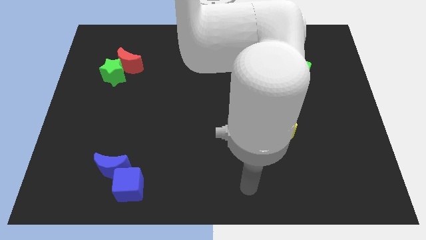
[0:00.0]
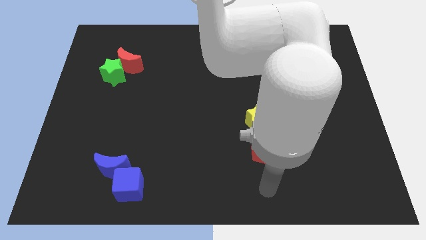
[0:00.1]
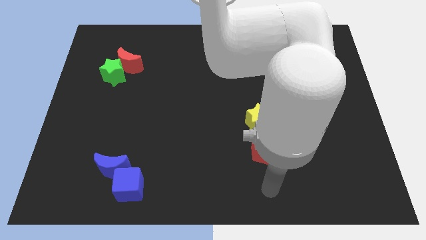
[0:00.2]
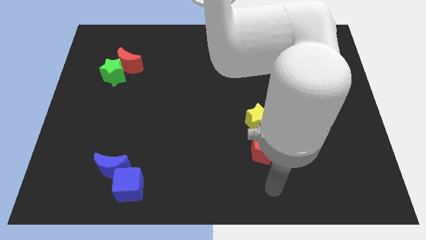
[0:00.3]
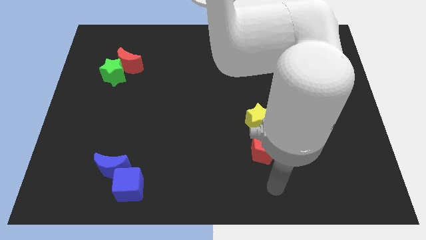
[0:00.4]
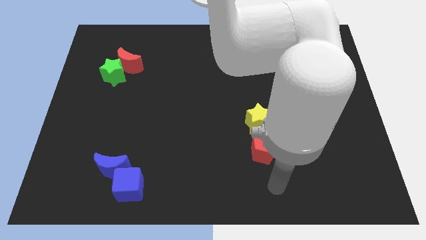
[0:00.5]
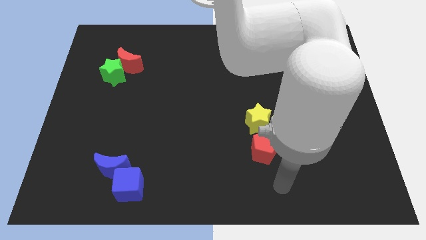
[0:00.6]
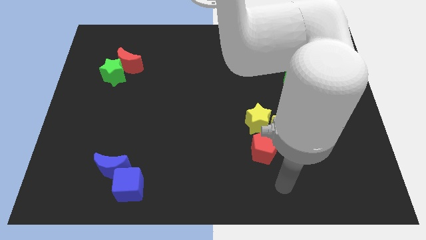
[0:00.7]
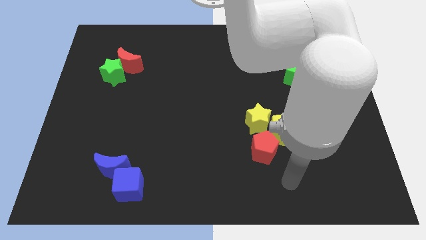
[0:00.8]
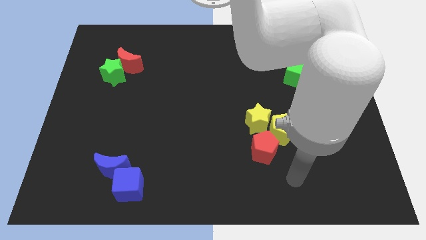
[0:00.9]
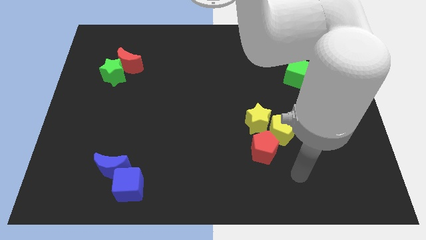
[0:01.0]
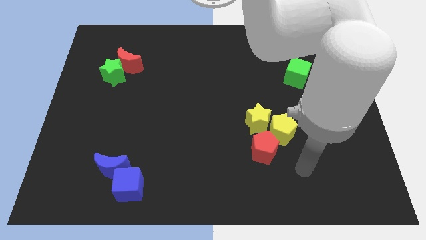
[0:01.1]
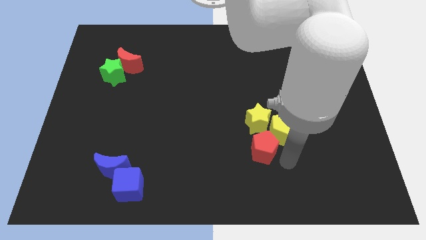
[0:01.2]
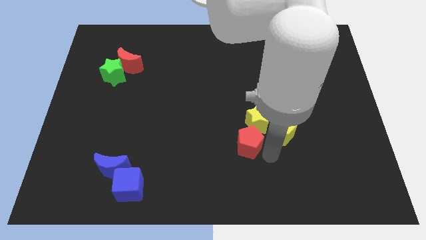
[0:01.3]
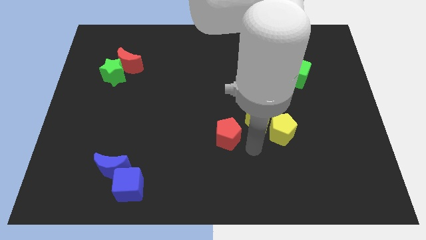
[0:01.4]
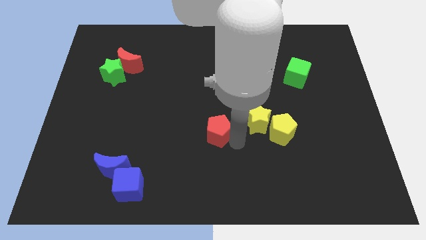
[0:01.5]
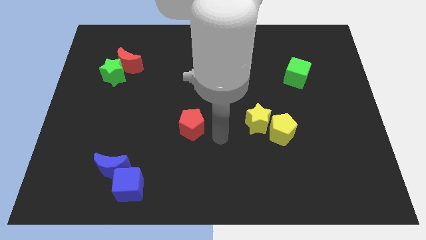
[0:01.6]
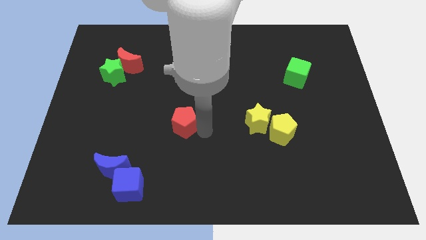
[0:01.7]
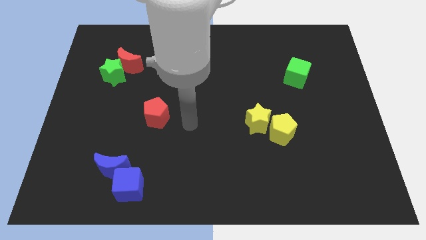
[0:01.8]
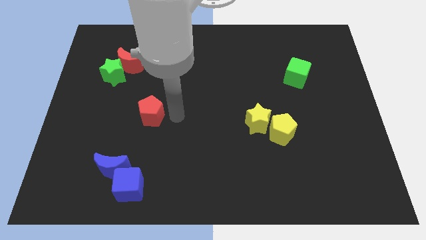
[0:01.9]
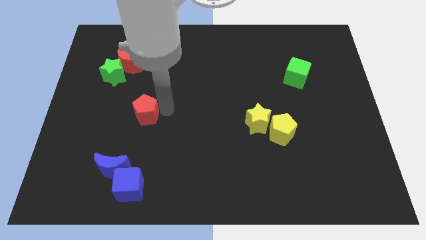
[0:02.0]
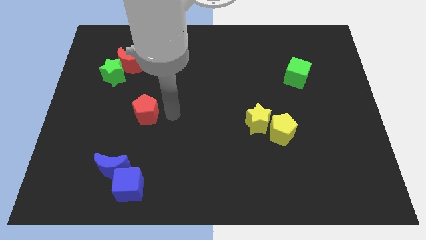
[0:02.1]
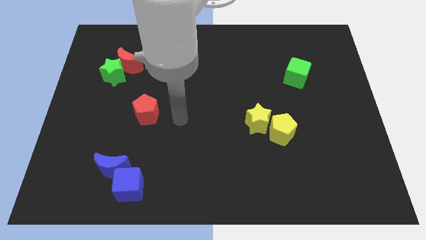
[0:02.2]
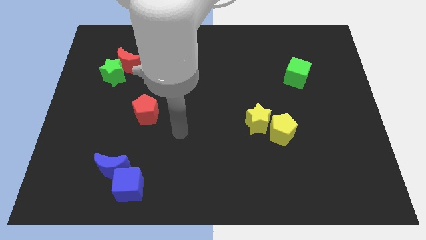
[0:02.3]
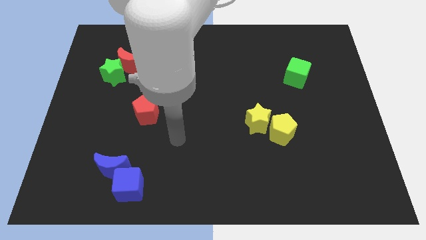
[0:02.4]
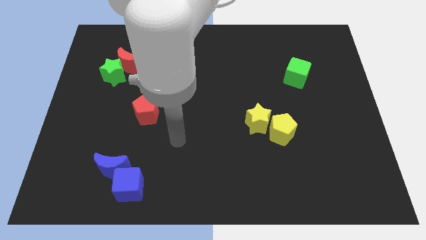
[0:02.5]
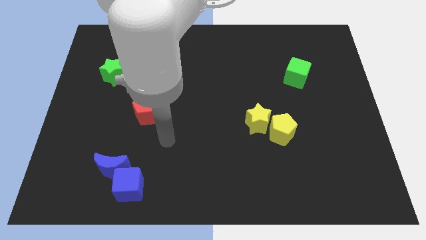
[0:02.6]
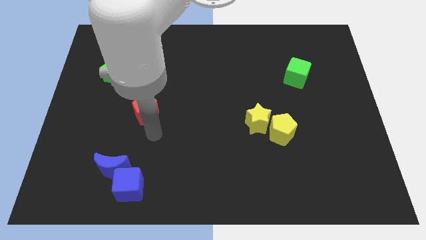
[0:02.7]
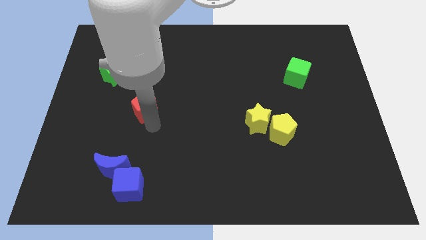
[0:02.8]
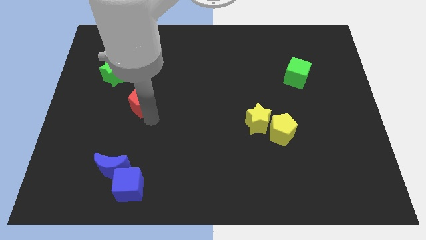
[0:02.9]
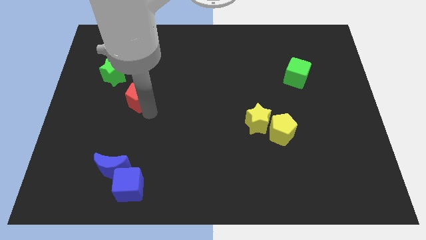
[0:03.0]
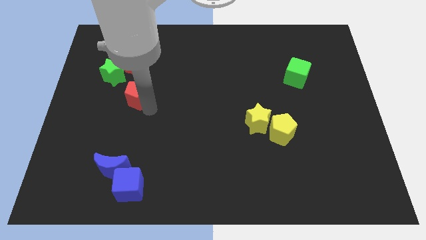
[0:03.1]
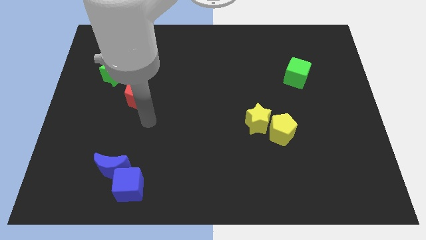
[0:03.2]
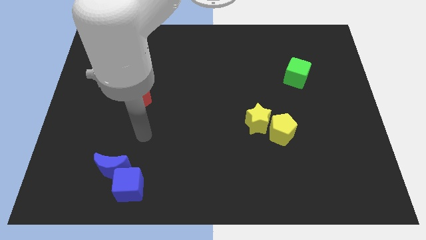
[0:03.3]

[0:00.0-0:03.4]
move red pentagon above blue cube

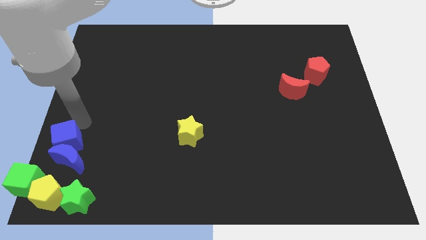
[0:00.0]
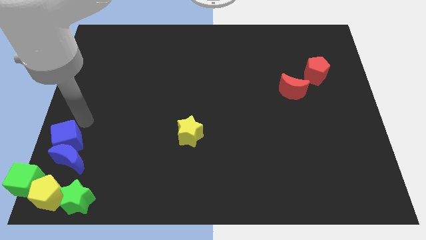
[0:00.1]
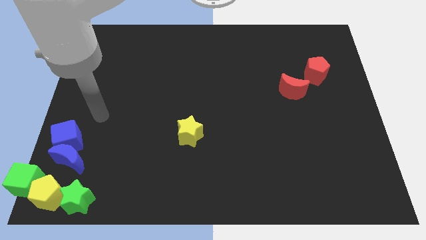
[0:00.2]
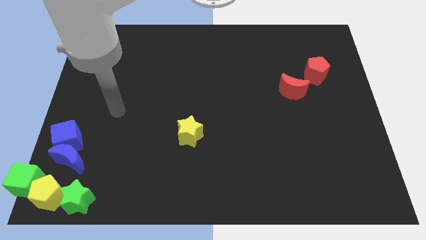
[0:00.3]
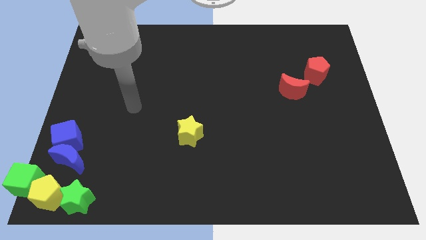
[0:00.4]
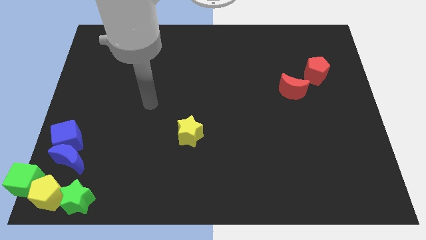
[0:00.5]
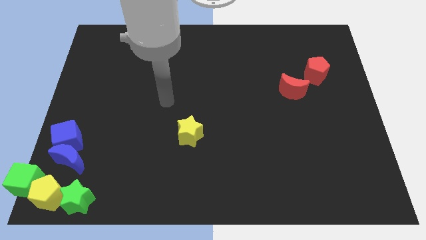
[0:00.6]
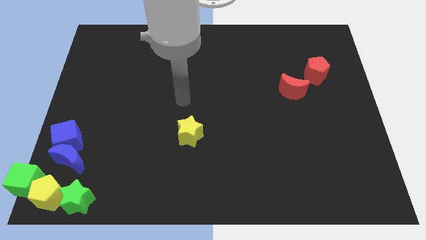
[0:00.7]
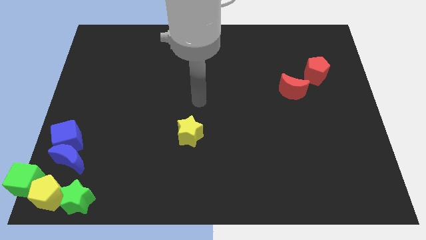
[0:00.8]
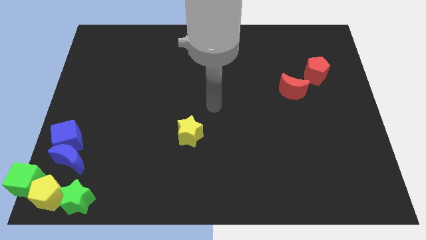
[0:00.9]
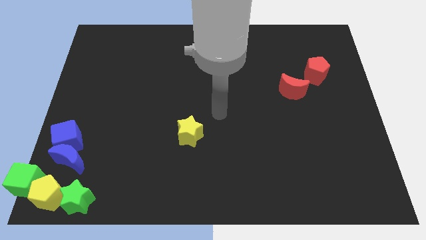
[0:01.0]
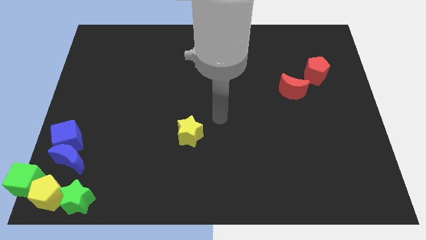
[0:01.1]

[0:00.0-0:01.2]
move away from the blue blocks

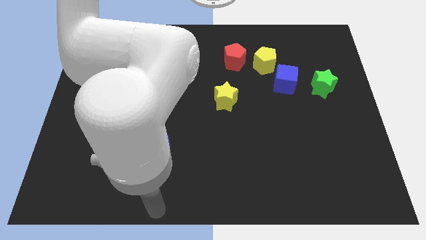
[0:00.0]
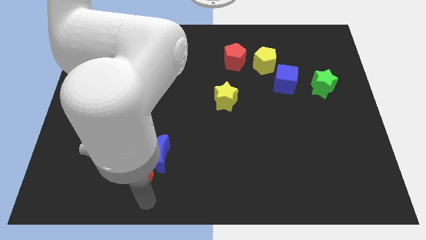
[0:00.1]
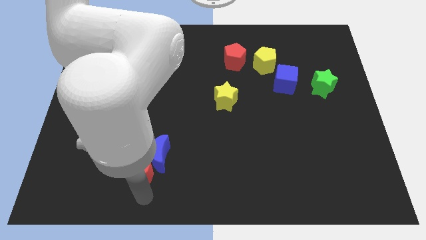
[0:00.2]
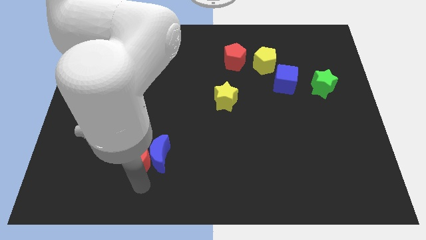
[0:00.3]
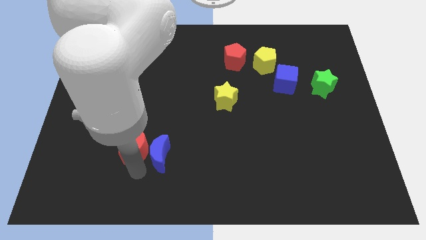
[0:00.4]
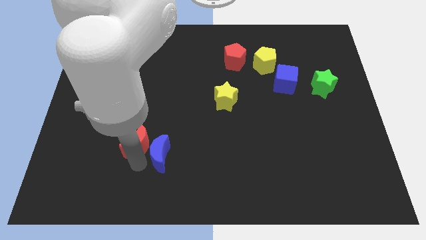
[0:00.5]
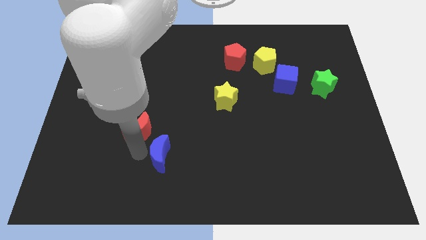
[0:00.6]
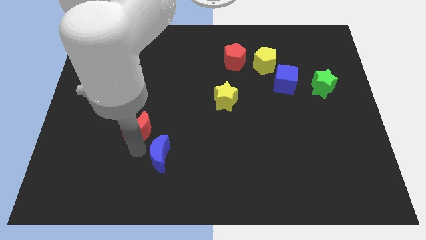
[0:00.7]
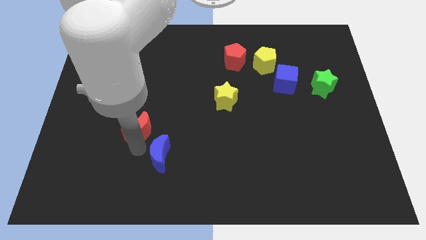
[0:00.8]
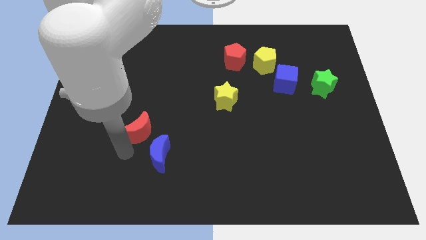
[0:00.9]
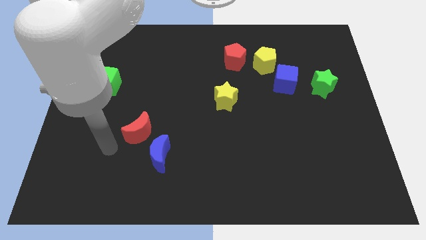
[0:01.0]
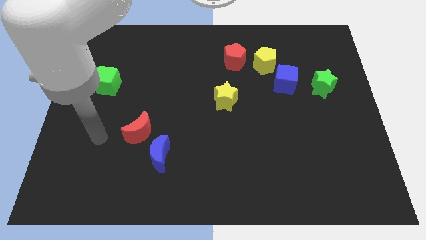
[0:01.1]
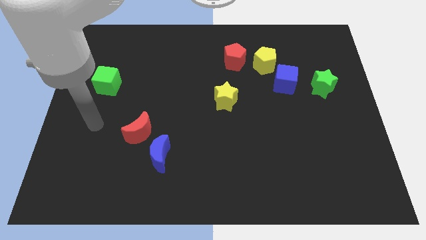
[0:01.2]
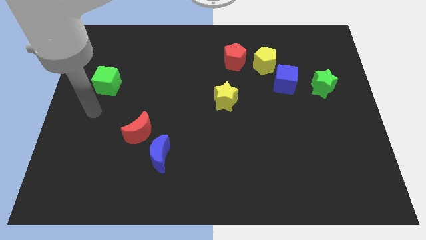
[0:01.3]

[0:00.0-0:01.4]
place the red crescent above the blue crescent

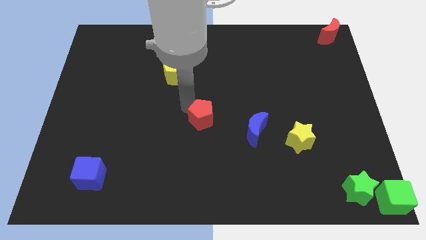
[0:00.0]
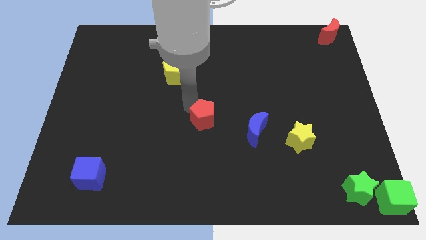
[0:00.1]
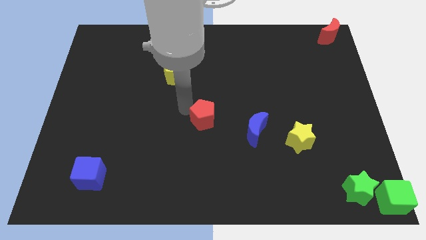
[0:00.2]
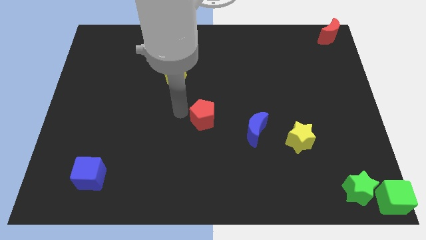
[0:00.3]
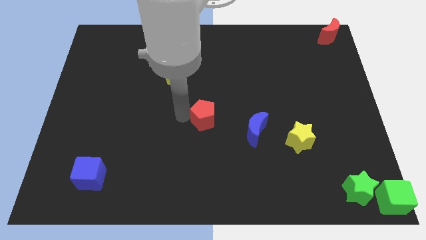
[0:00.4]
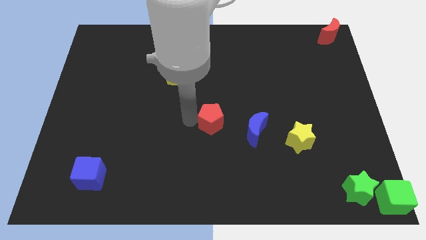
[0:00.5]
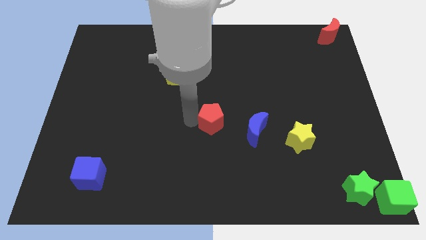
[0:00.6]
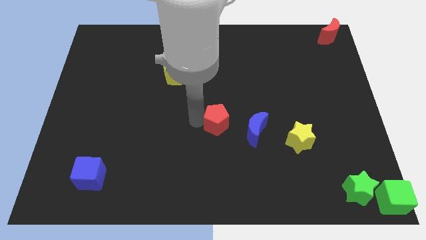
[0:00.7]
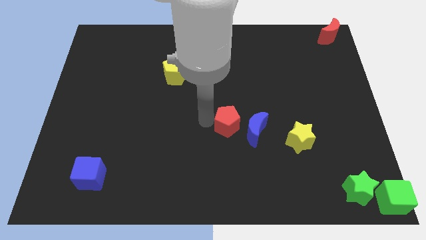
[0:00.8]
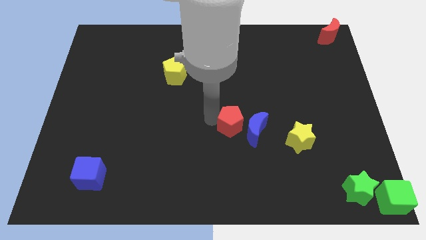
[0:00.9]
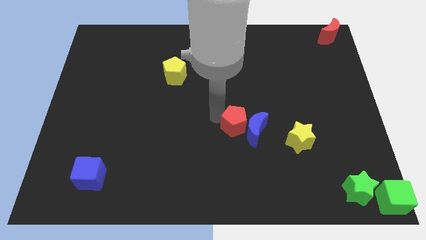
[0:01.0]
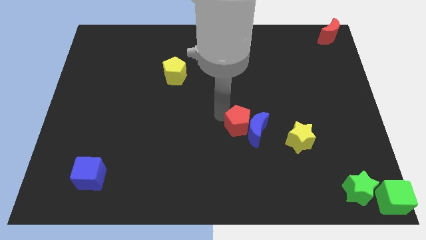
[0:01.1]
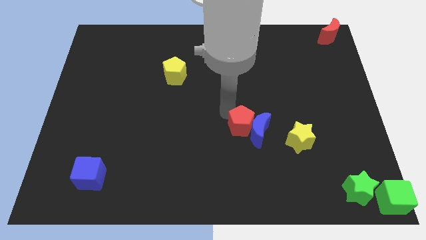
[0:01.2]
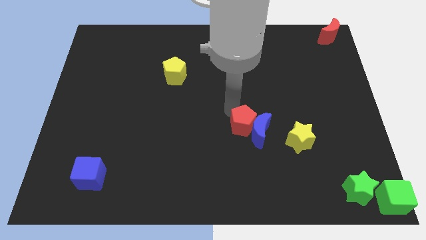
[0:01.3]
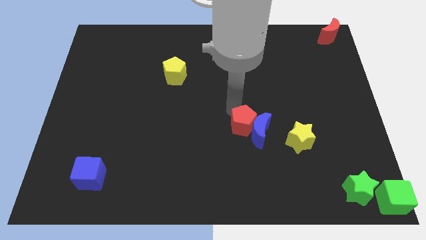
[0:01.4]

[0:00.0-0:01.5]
push the red pentagon into the blue crescent

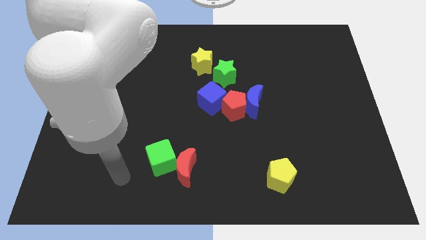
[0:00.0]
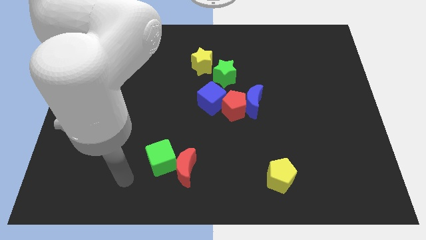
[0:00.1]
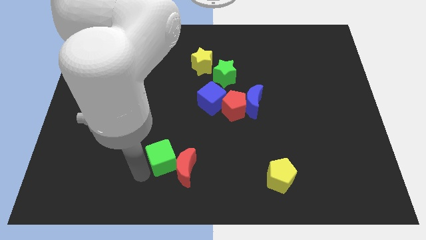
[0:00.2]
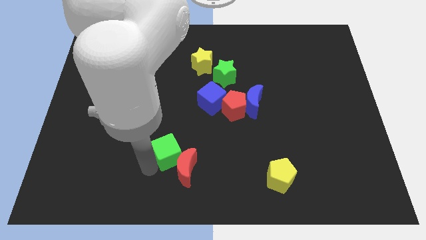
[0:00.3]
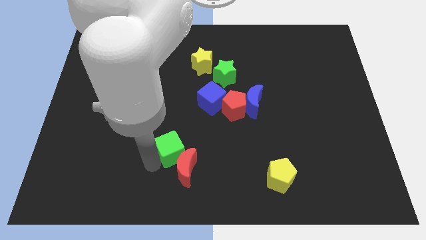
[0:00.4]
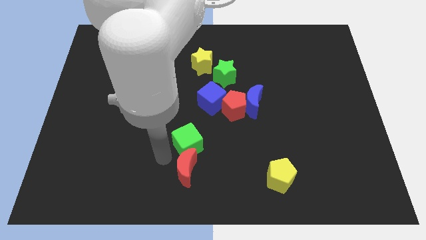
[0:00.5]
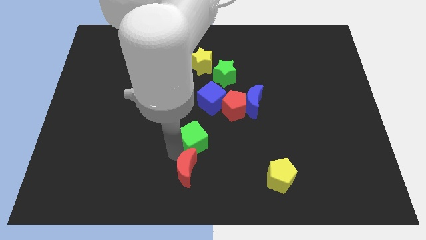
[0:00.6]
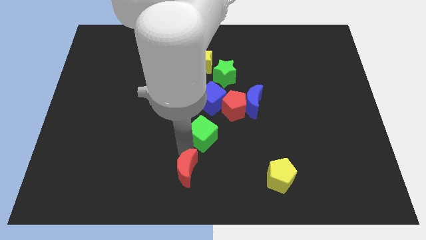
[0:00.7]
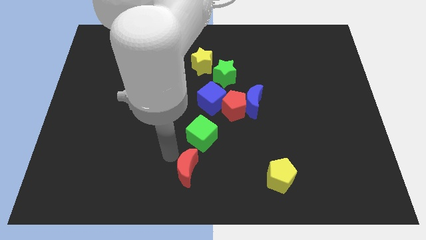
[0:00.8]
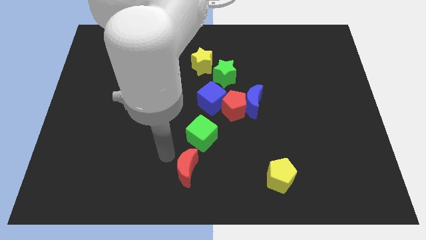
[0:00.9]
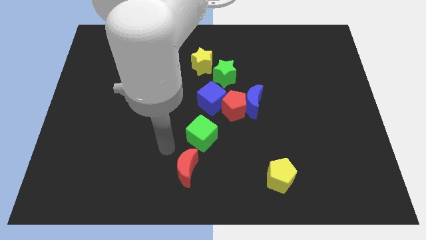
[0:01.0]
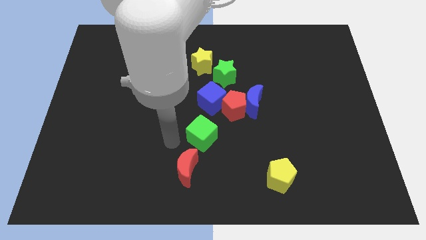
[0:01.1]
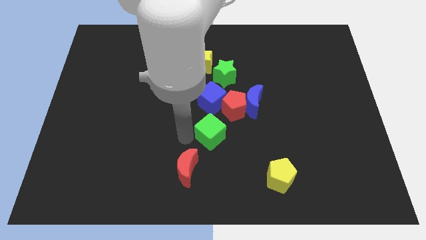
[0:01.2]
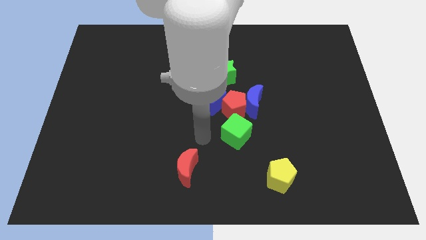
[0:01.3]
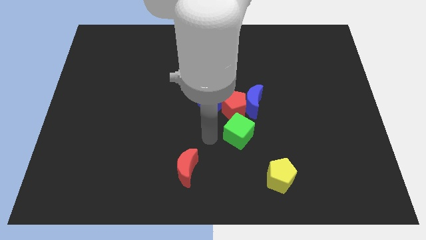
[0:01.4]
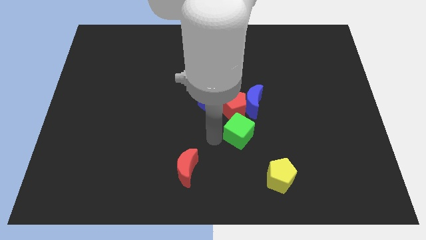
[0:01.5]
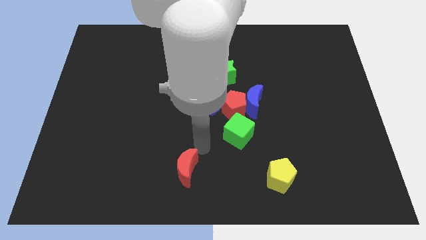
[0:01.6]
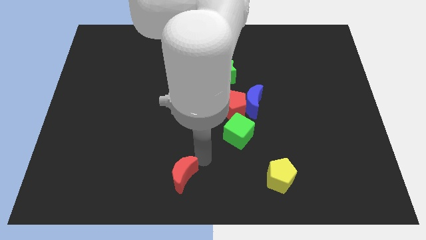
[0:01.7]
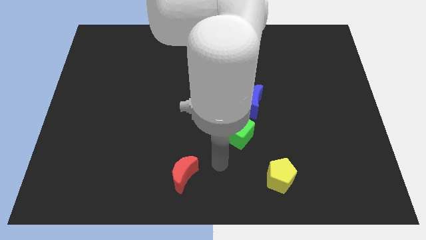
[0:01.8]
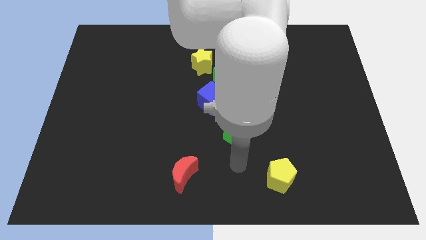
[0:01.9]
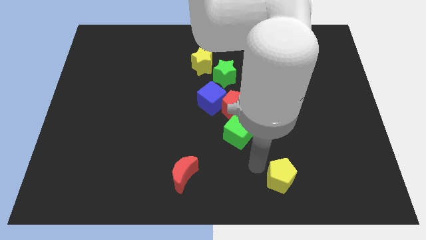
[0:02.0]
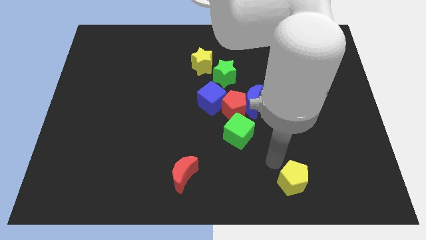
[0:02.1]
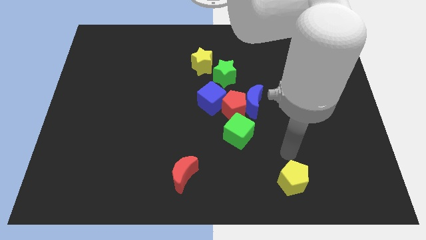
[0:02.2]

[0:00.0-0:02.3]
move green cube below red pentagon
